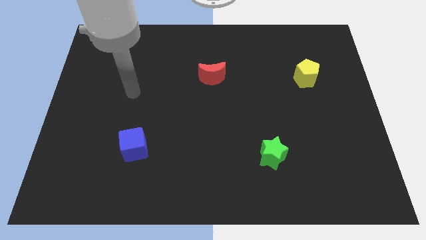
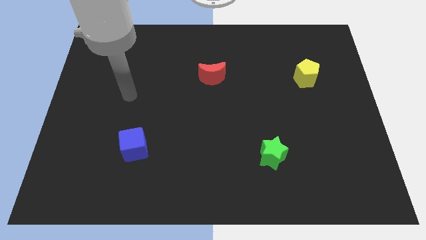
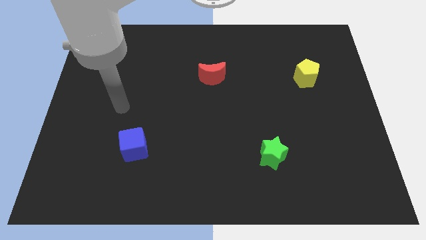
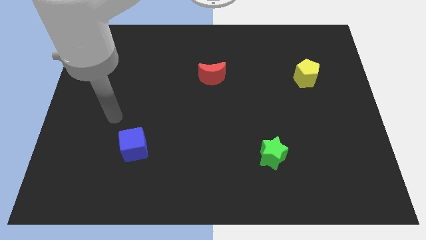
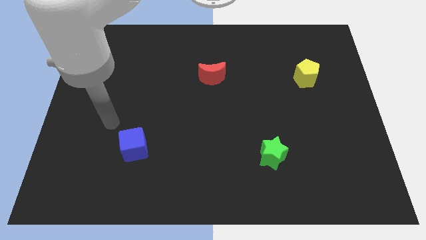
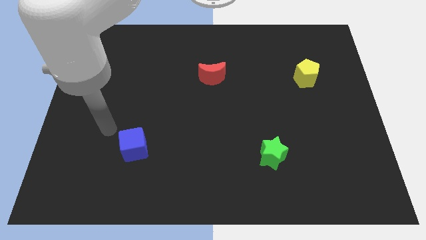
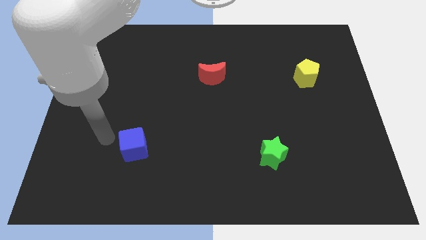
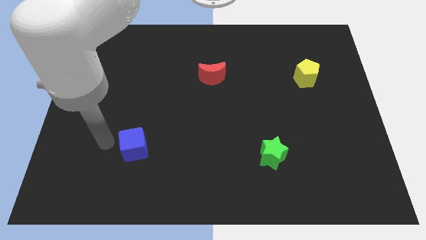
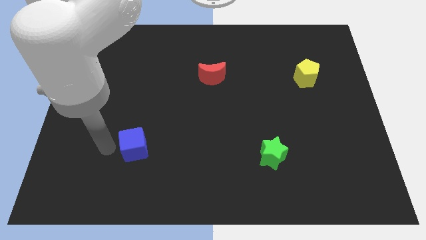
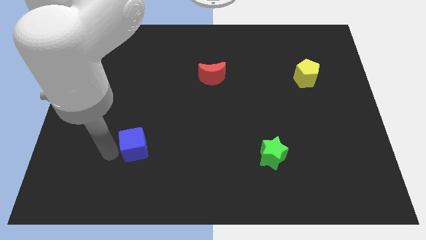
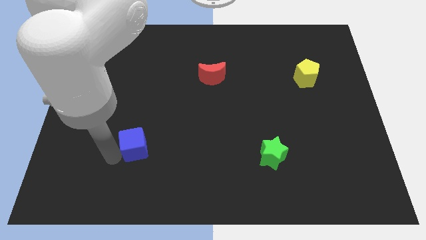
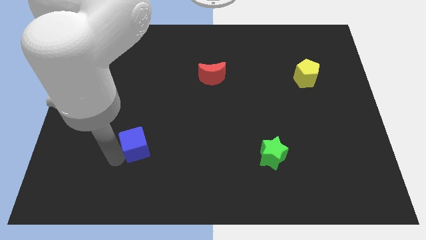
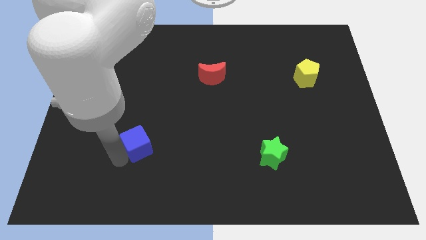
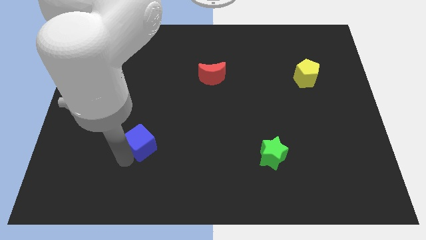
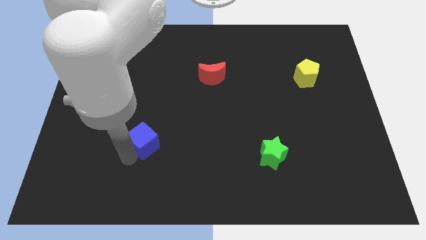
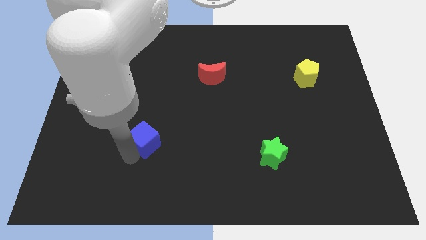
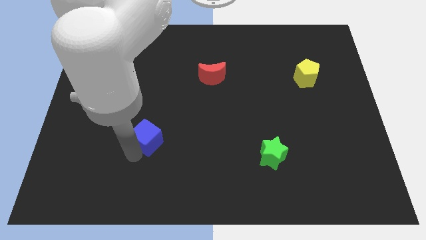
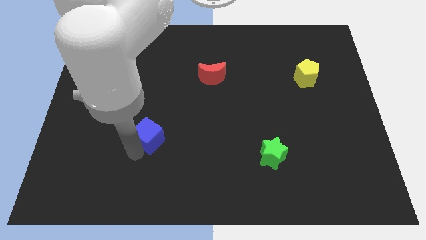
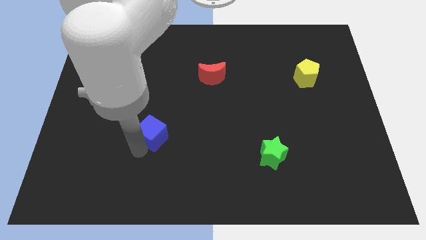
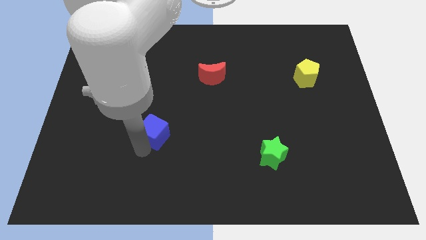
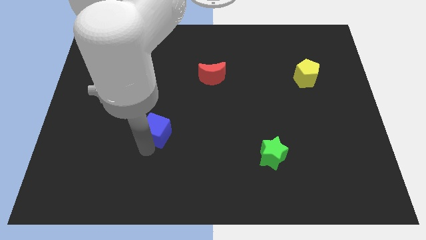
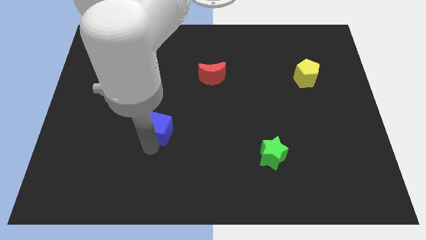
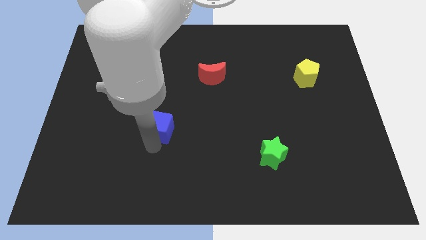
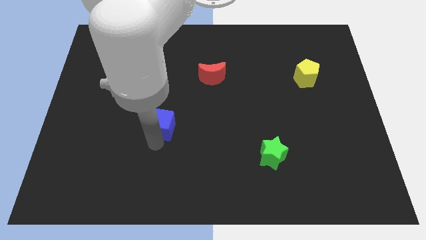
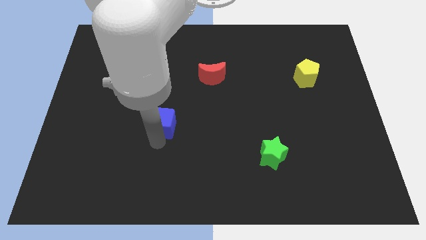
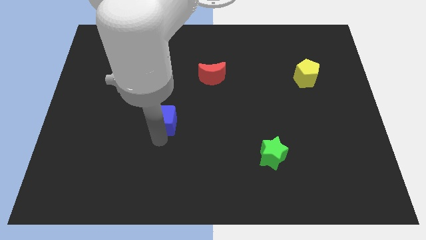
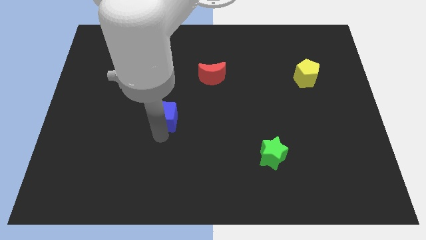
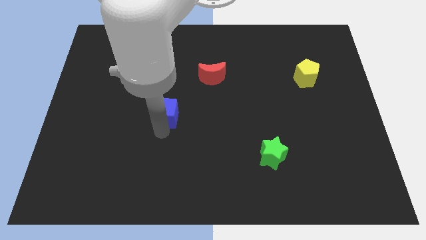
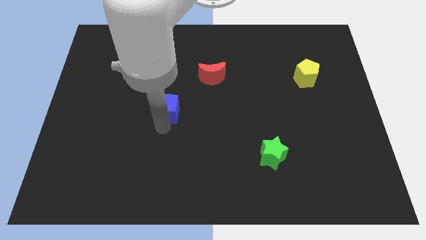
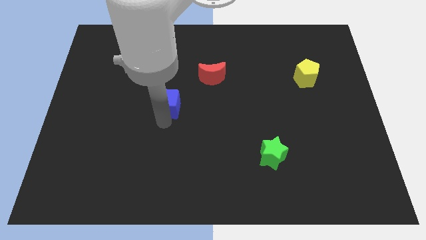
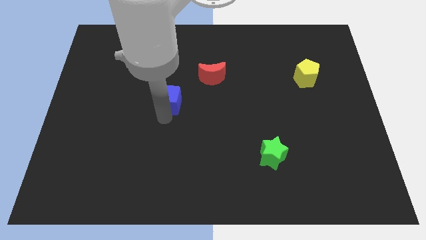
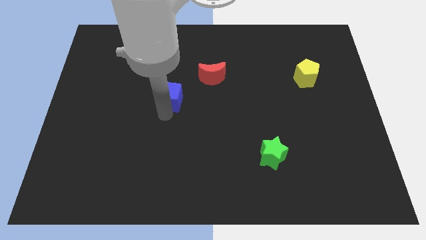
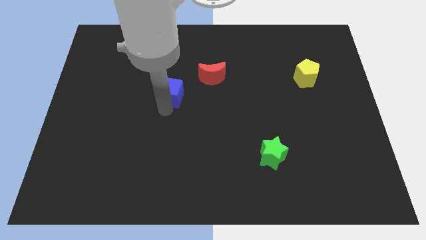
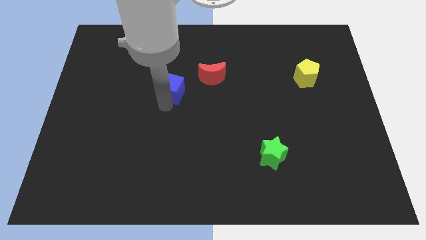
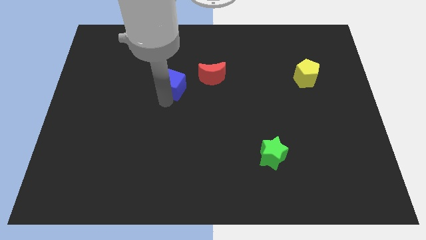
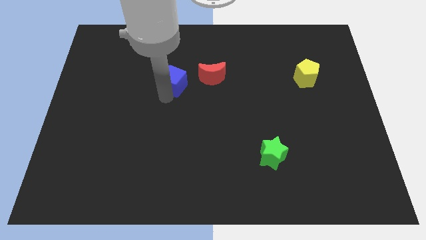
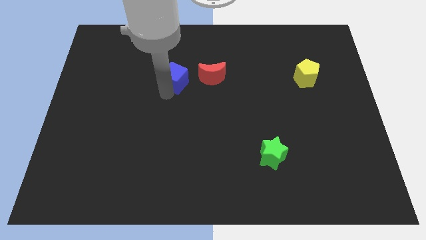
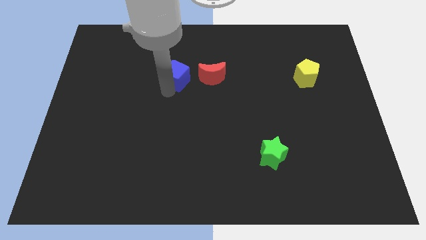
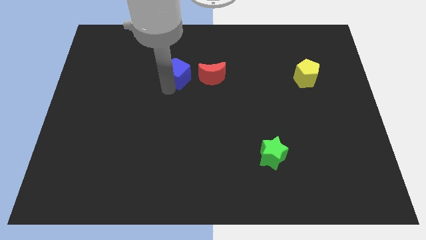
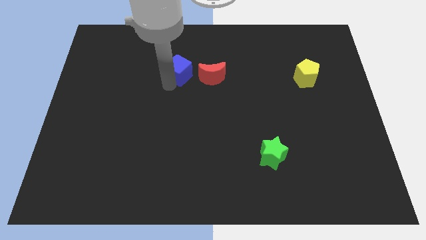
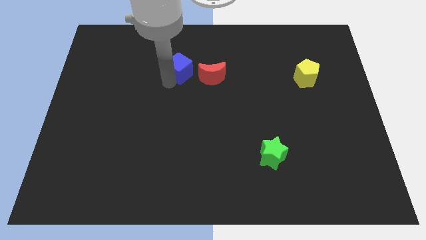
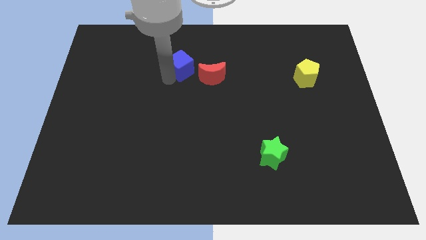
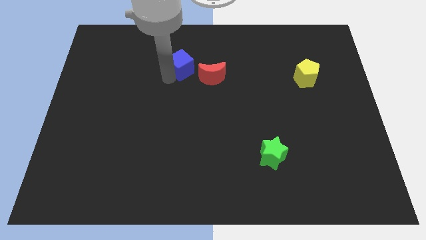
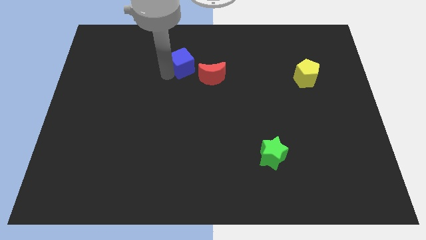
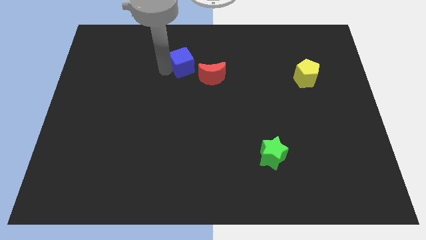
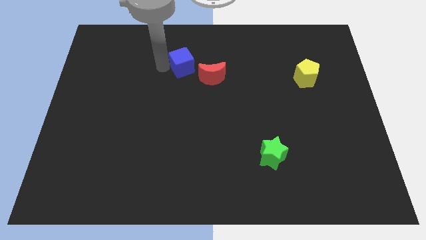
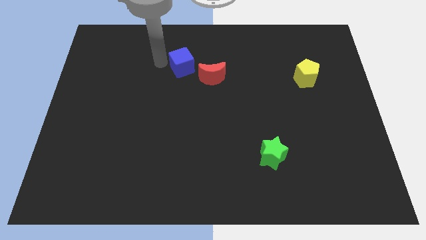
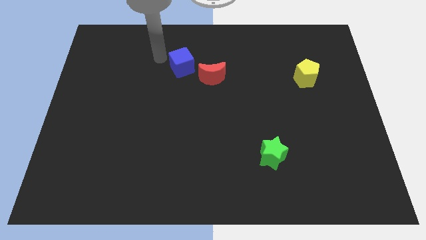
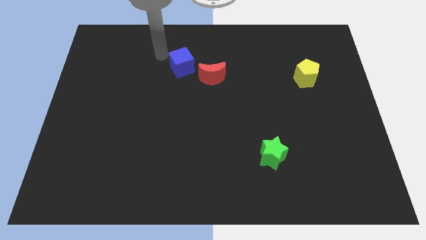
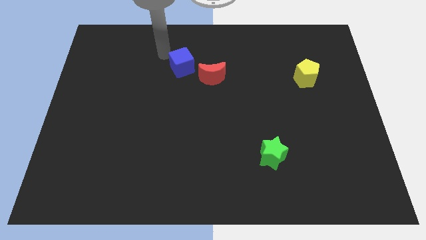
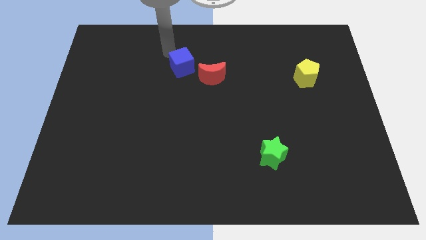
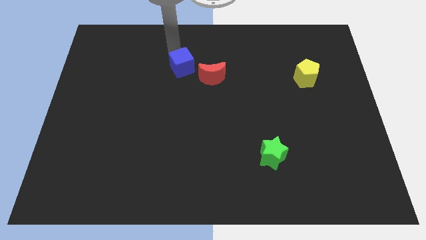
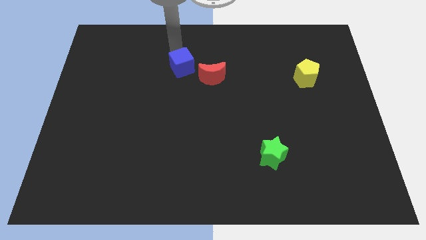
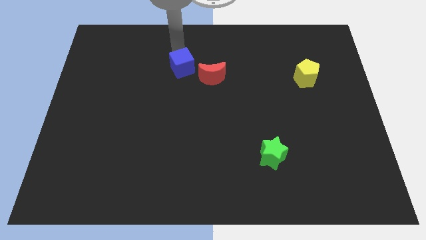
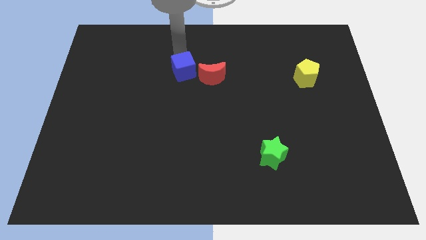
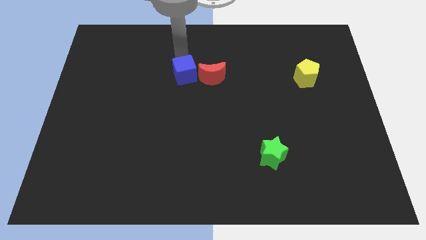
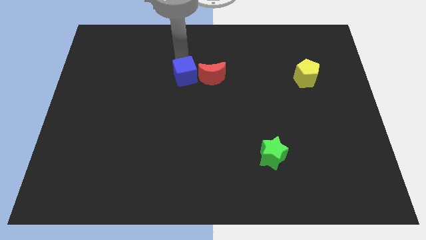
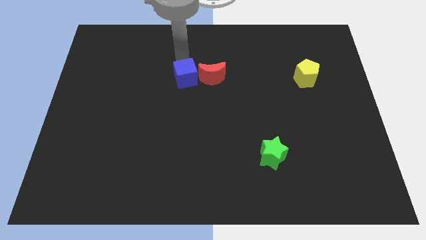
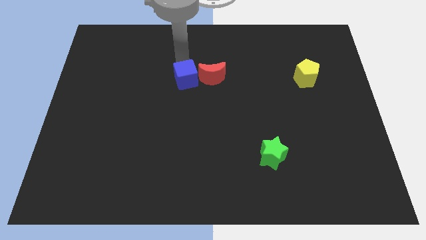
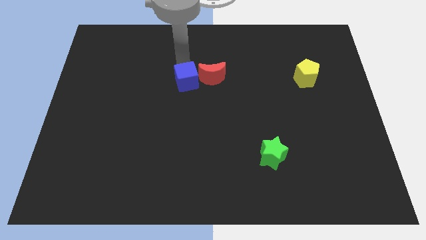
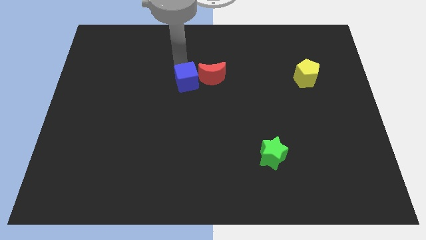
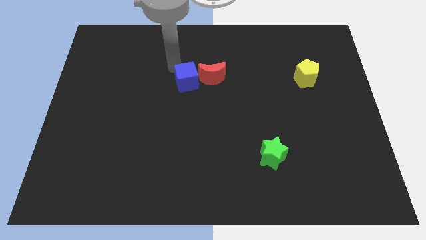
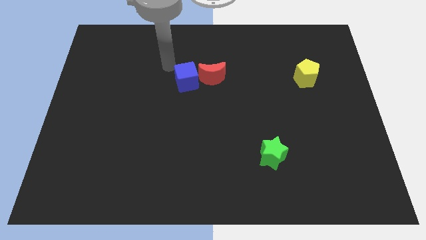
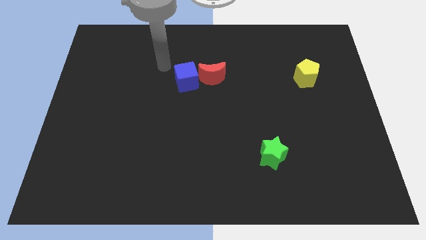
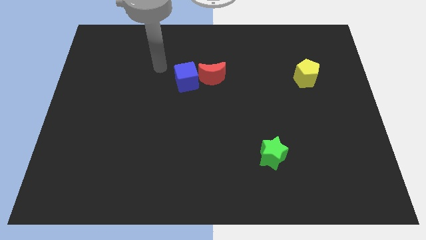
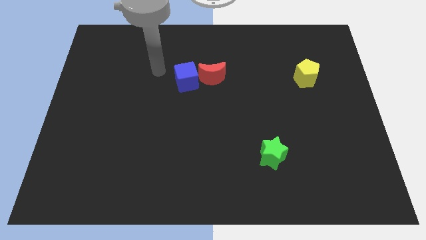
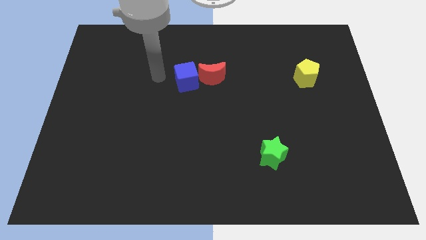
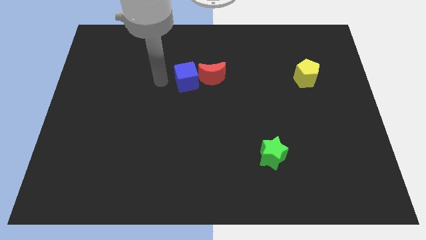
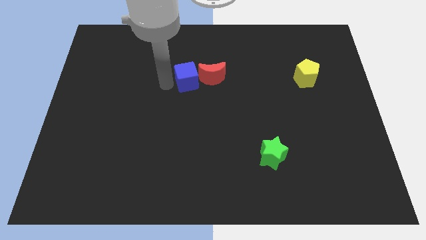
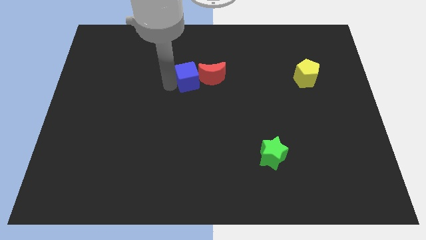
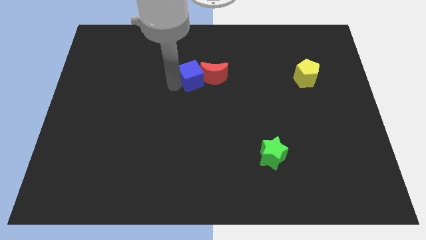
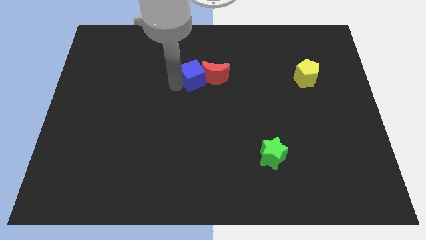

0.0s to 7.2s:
put the blue cube next to the red block

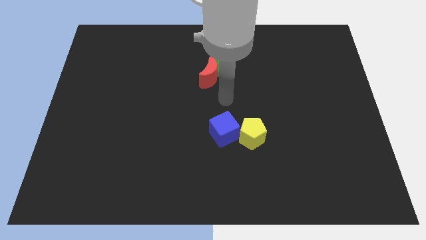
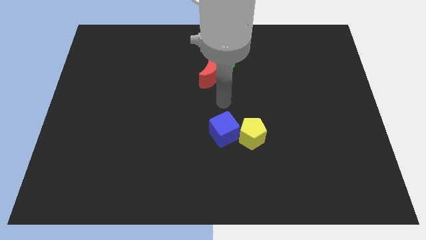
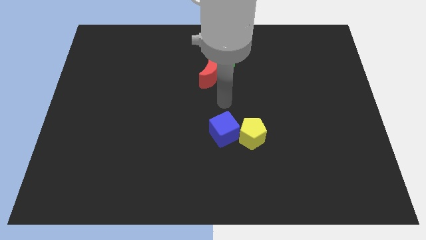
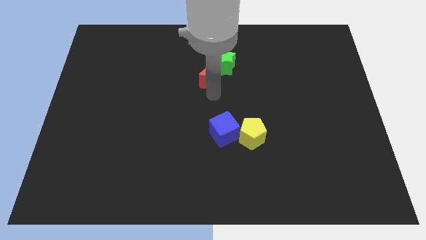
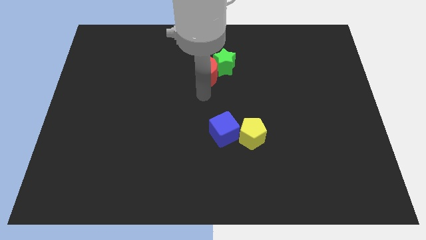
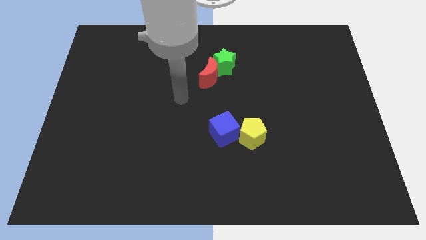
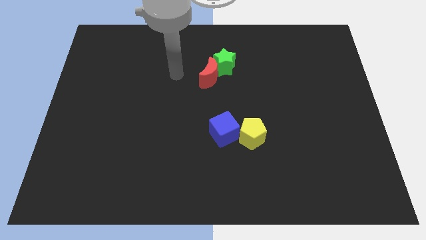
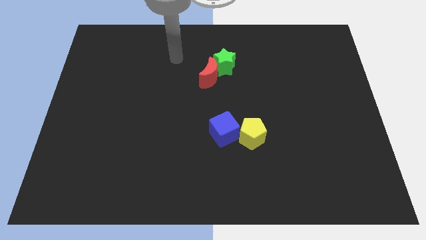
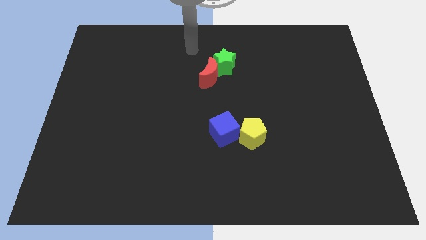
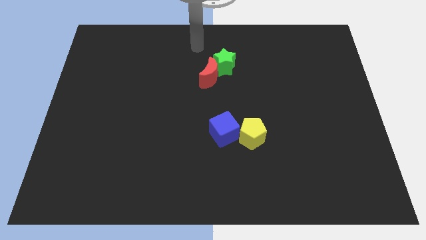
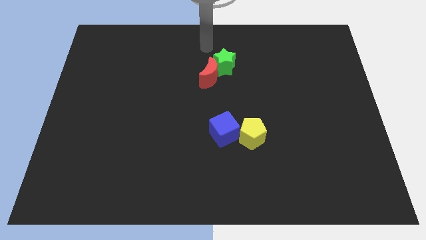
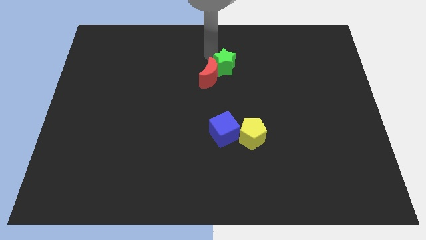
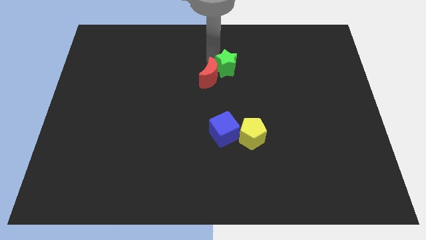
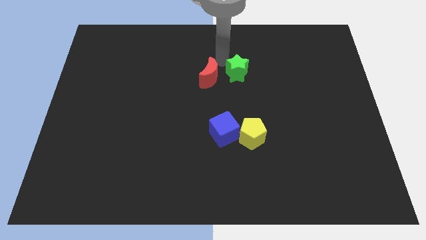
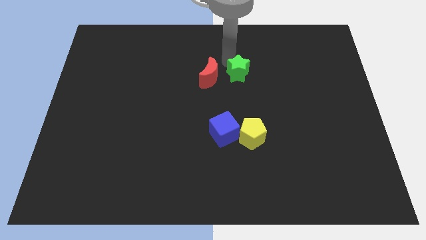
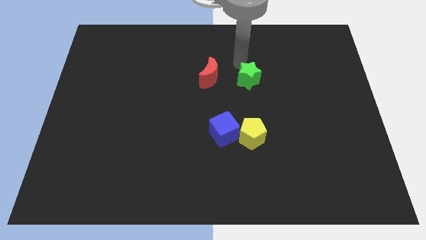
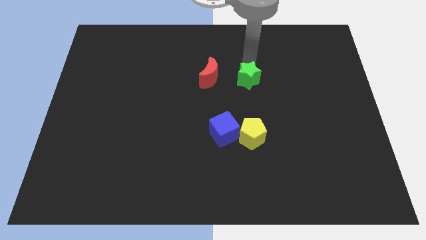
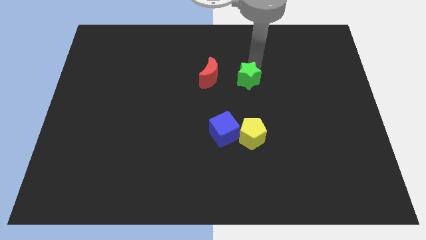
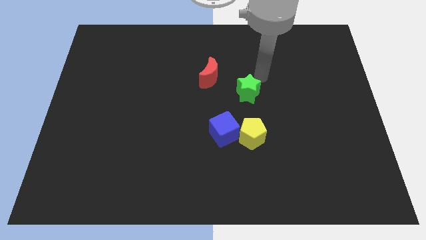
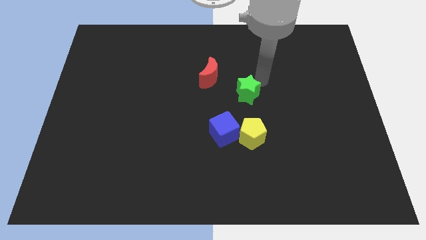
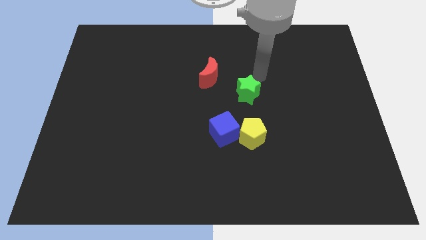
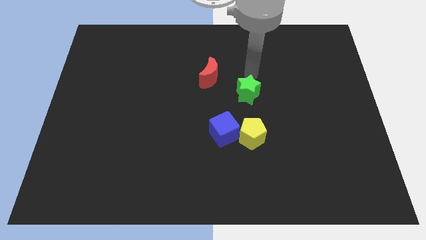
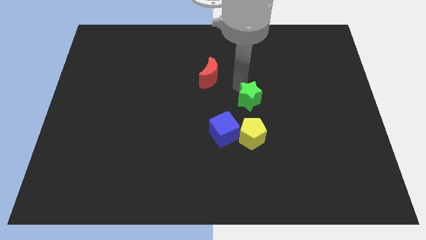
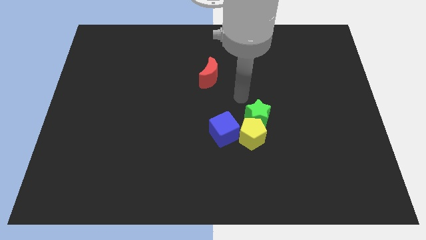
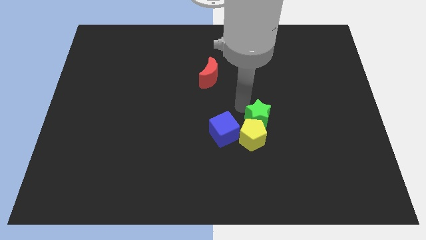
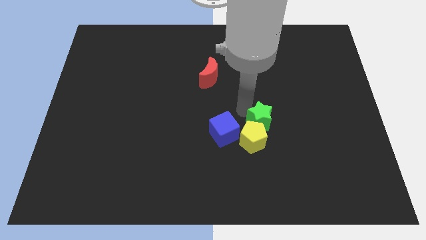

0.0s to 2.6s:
slide the green block close to the yellow pentagon
